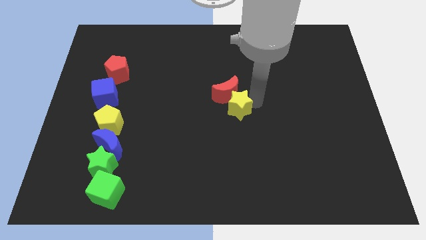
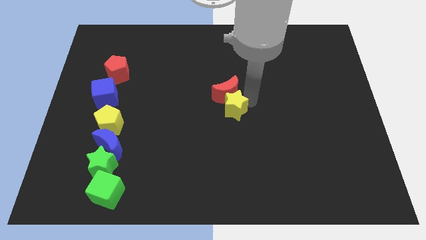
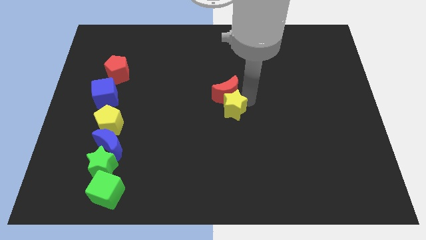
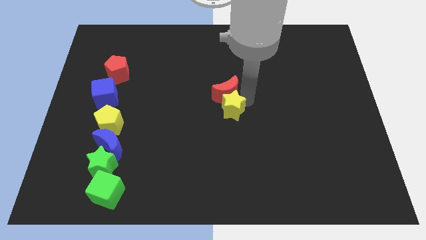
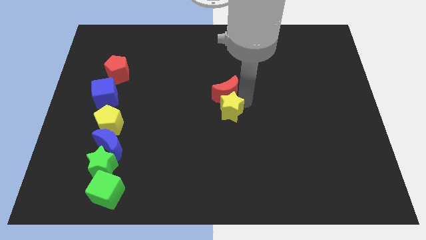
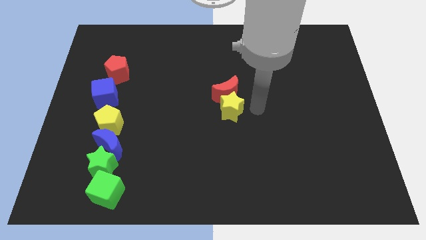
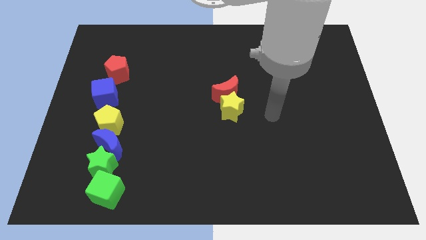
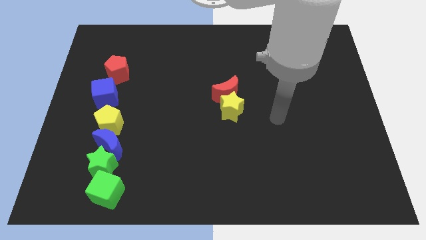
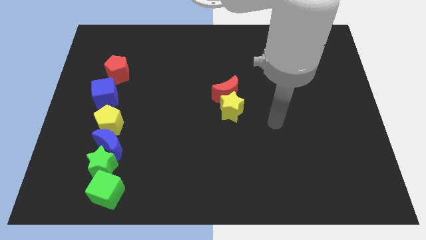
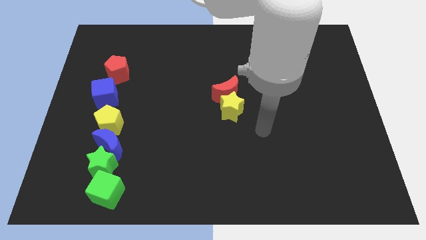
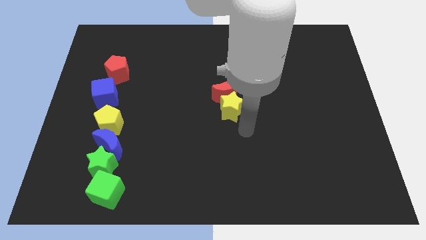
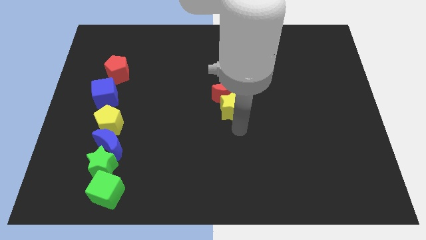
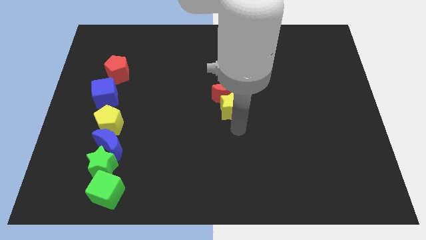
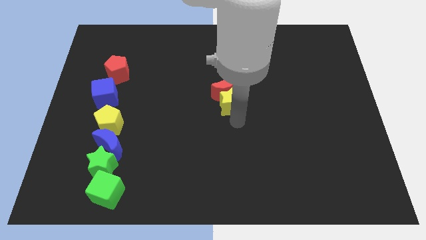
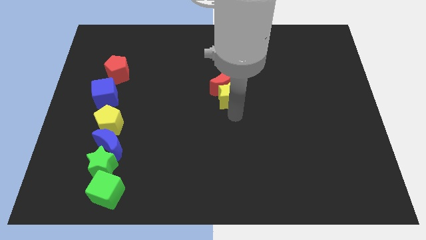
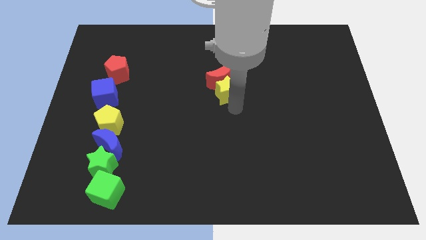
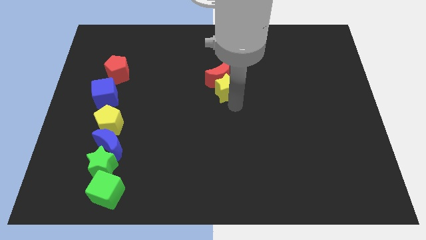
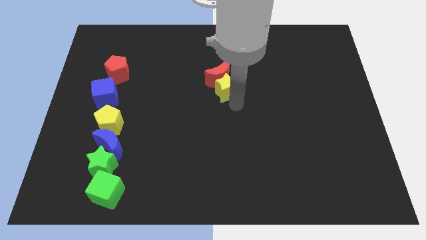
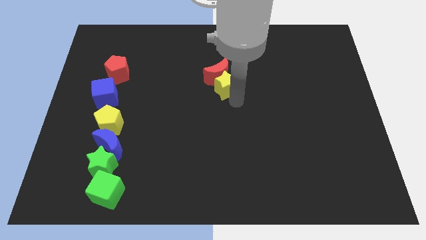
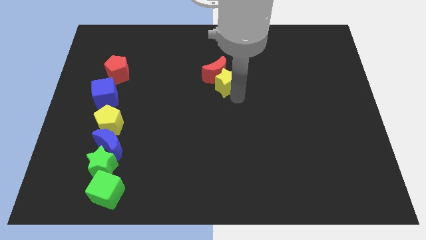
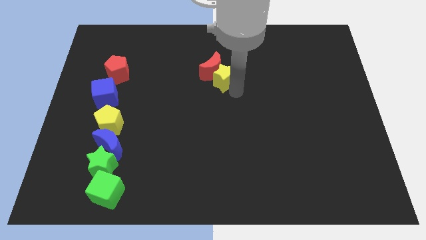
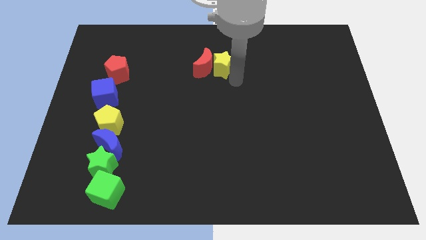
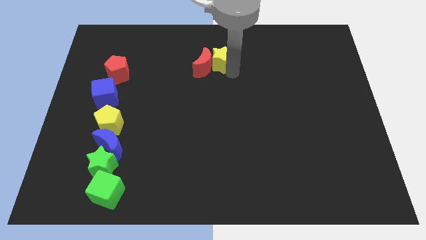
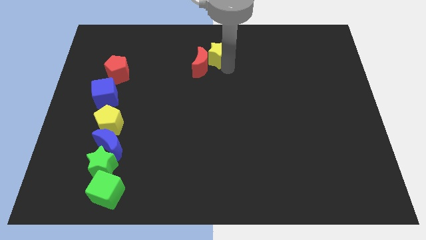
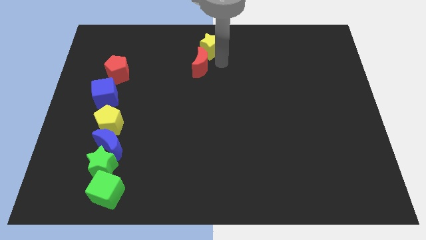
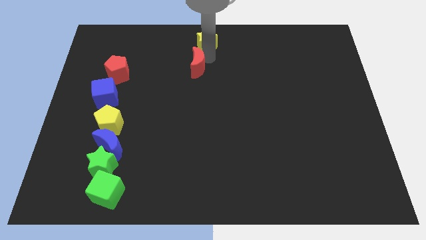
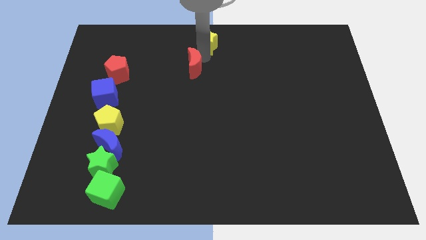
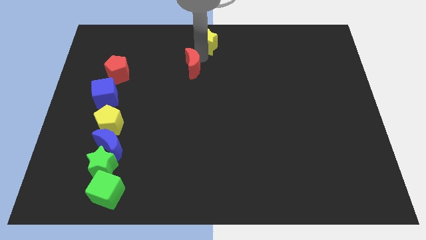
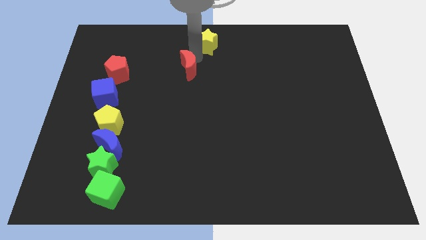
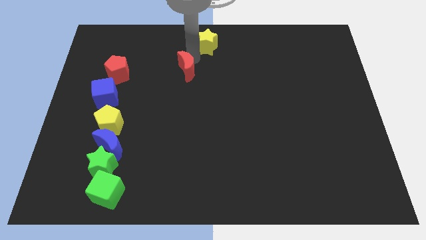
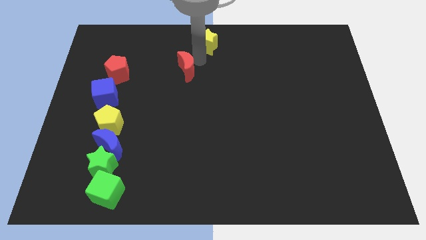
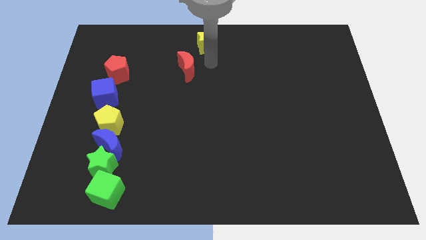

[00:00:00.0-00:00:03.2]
push the yellow star to the top center

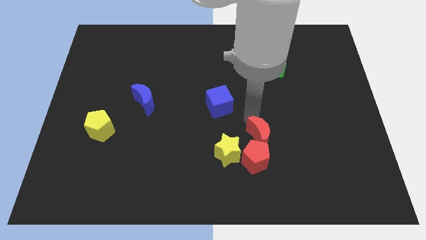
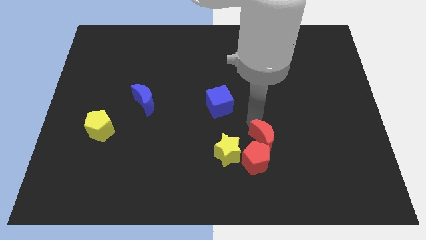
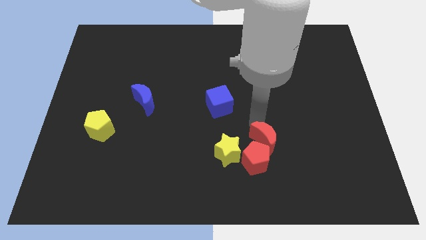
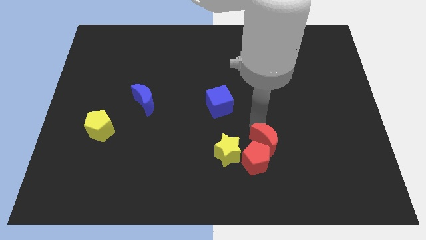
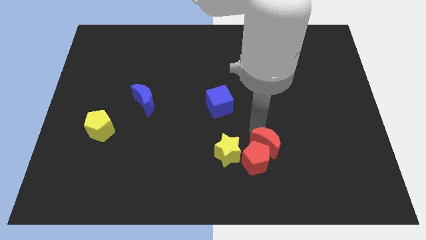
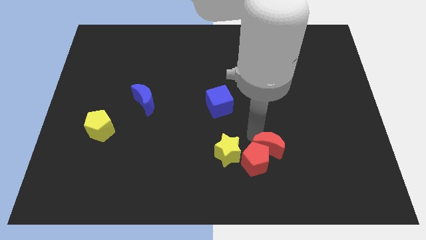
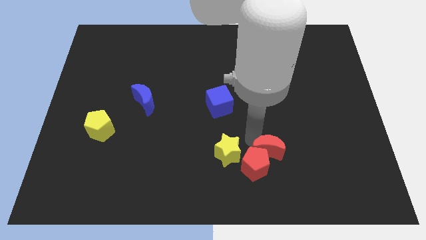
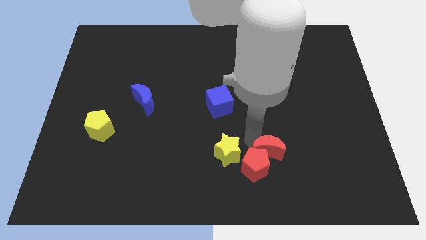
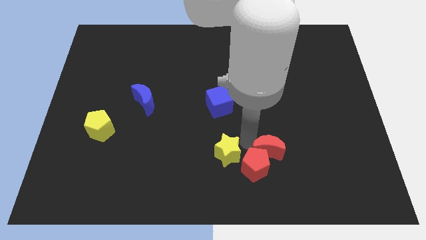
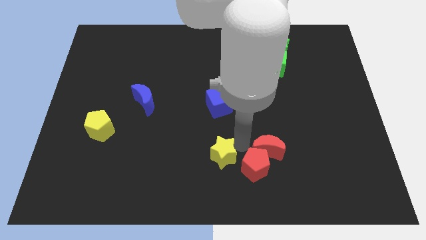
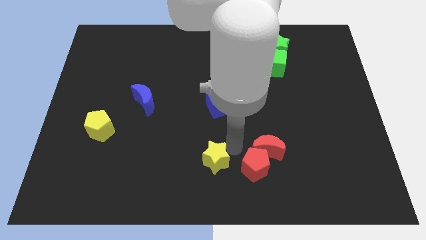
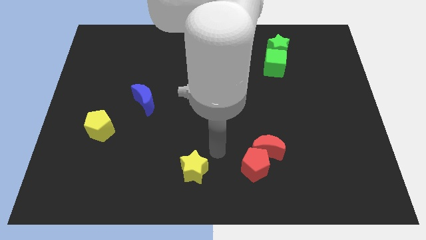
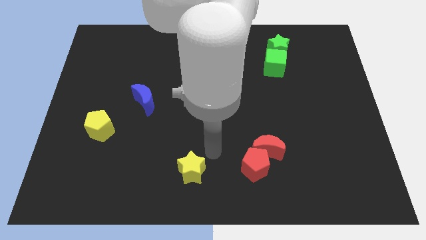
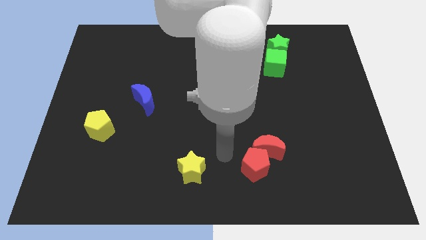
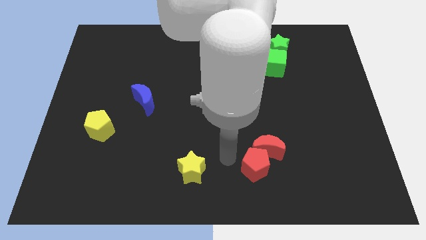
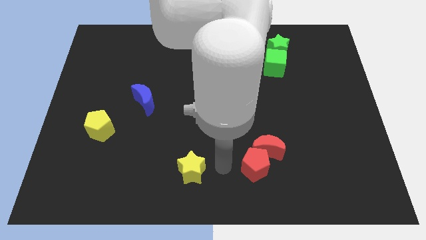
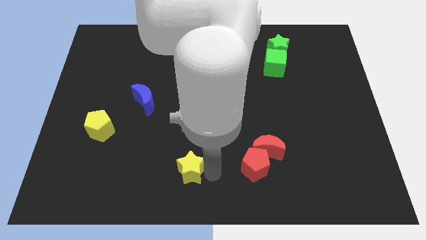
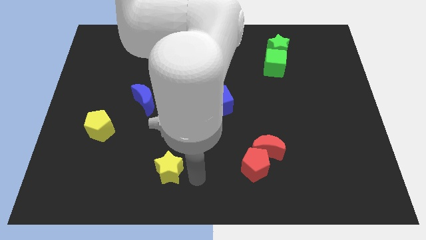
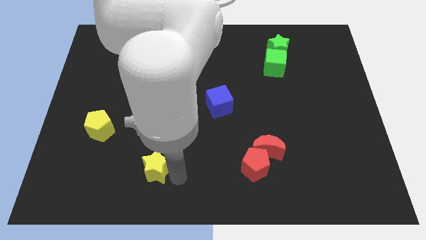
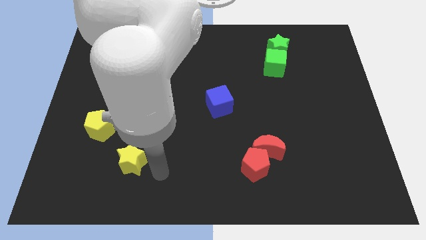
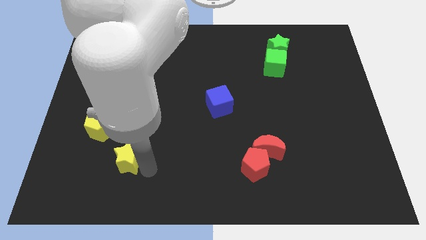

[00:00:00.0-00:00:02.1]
separate the yellow star form red pentagon

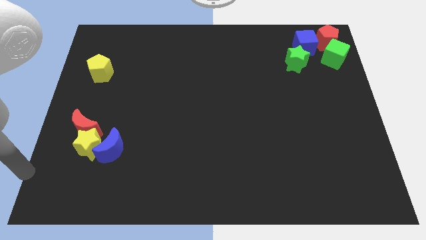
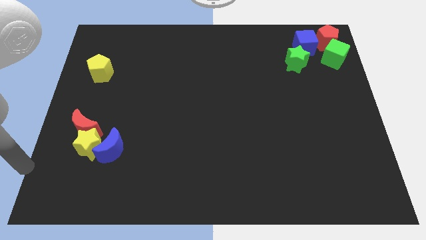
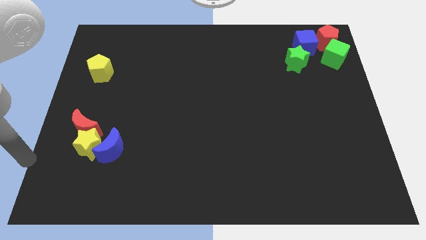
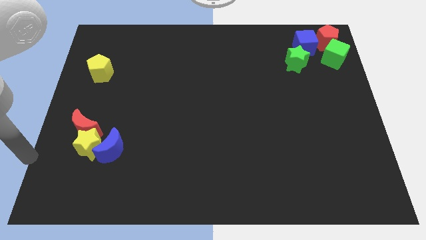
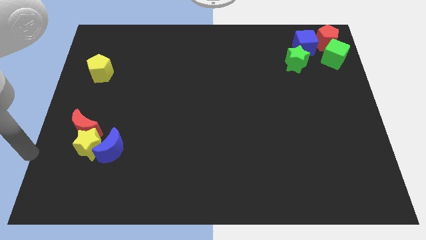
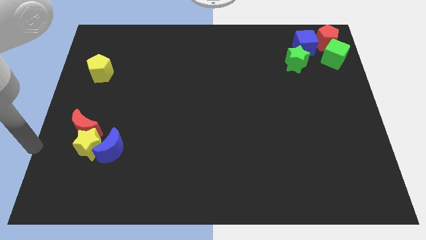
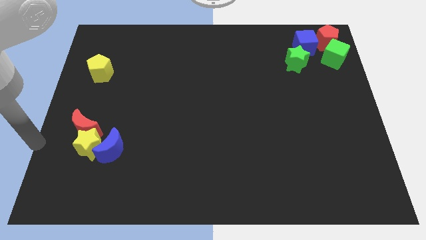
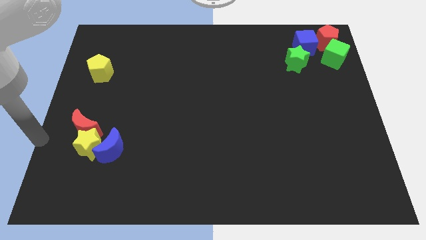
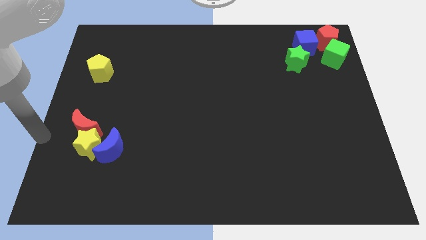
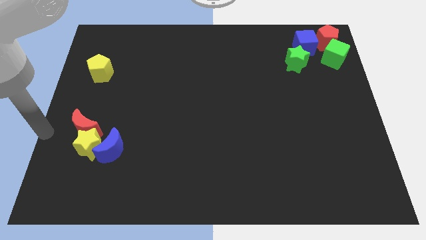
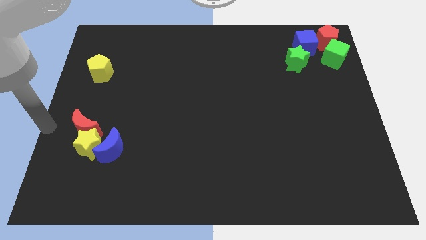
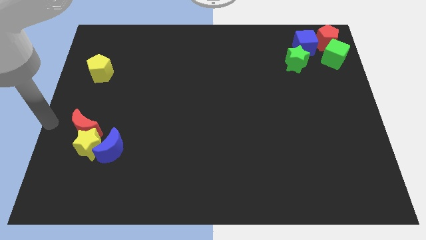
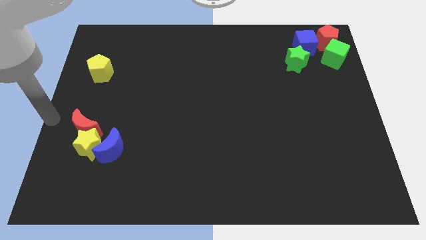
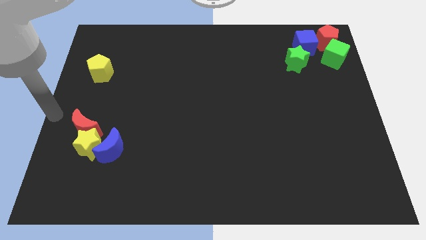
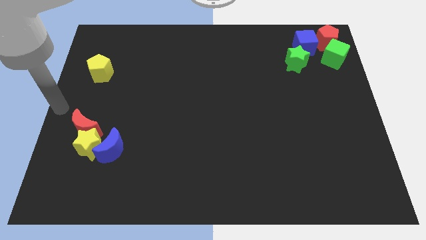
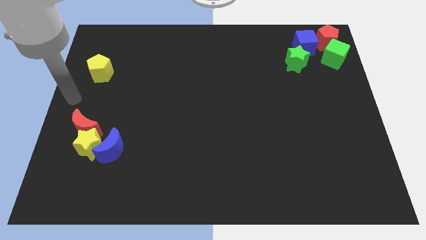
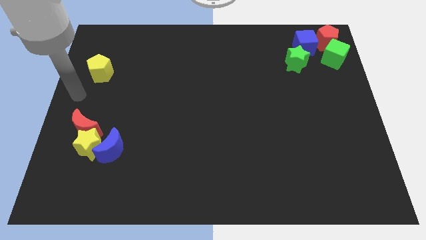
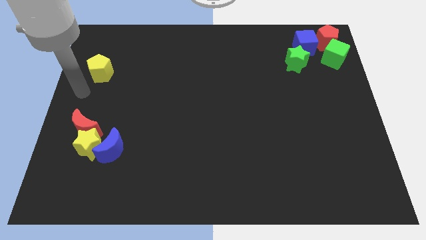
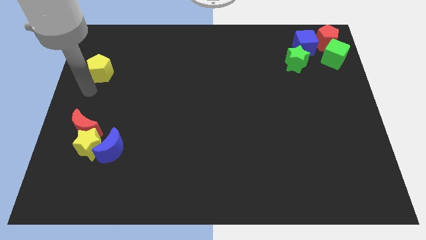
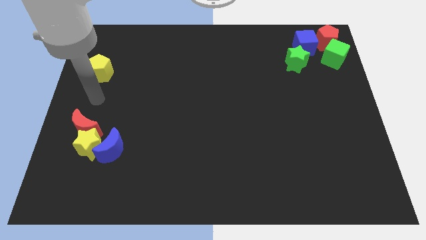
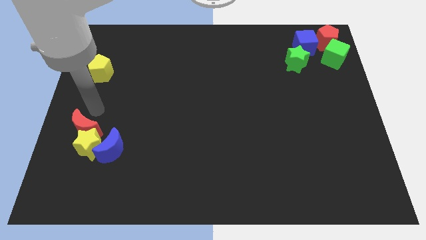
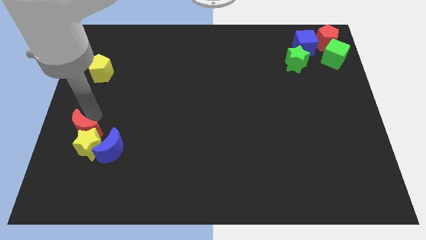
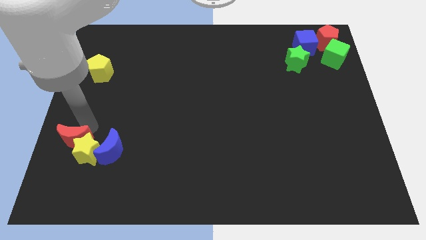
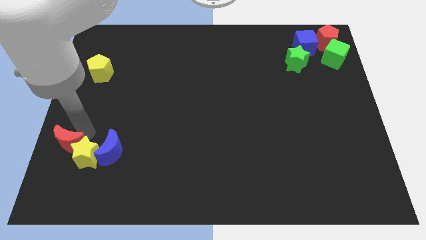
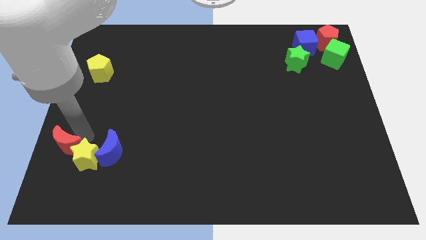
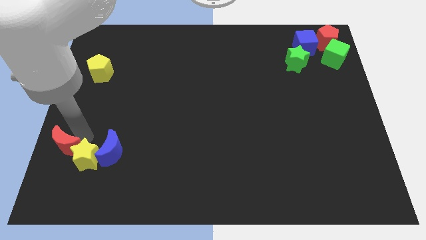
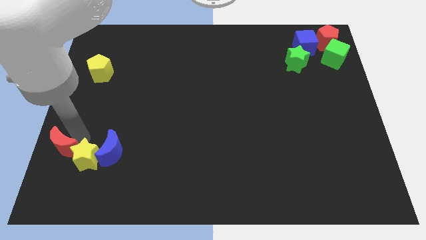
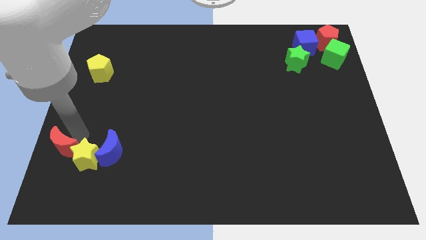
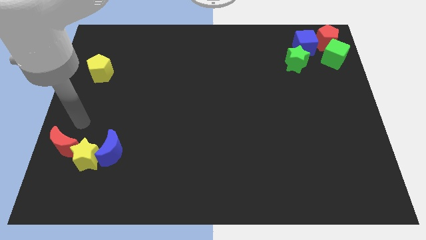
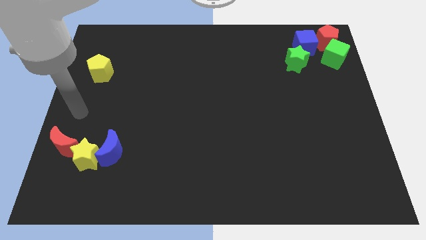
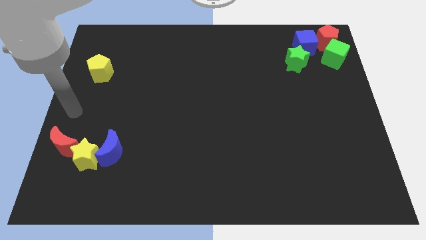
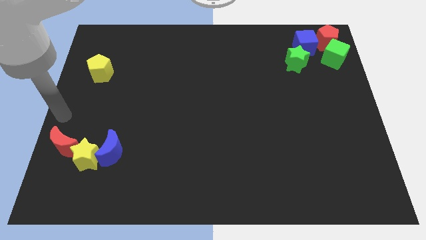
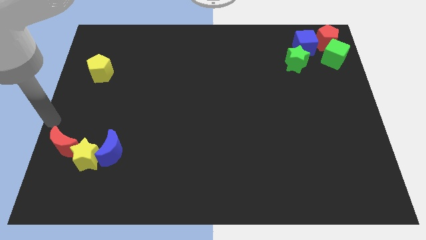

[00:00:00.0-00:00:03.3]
slightly drag the yellow stared crescent towards bottom

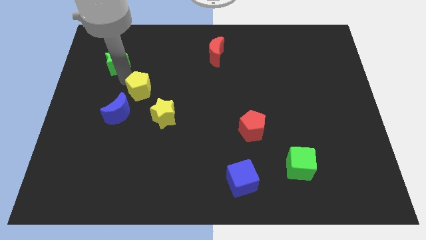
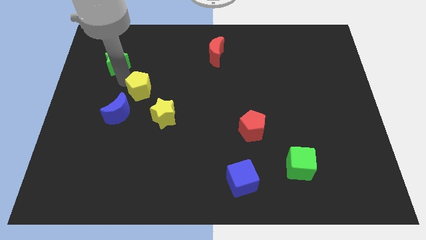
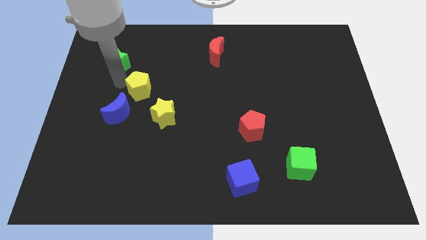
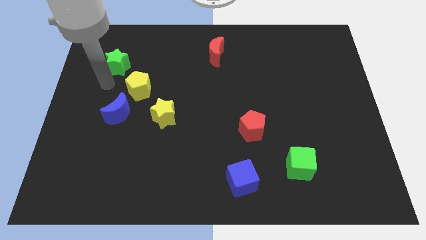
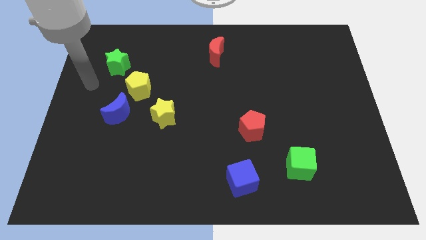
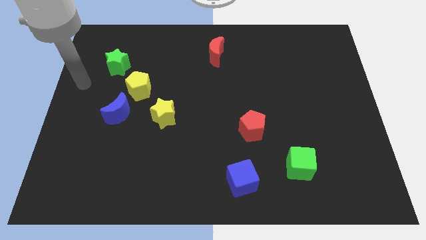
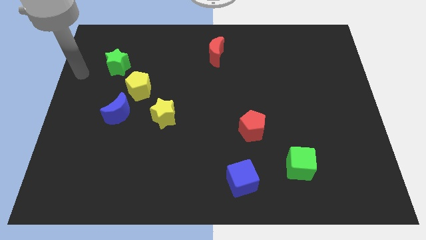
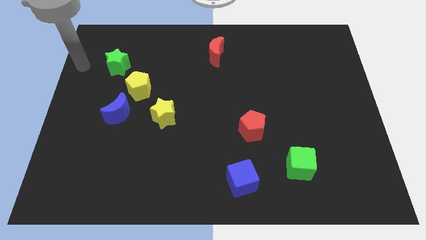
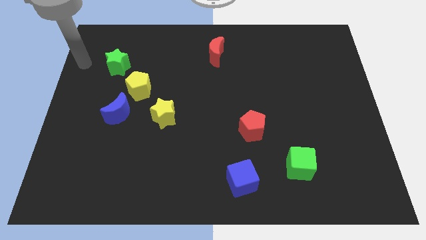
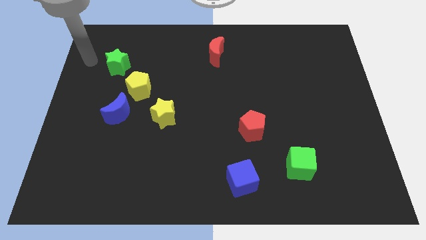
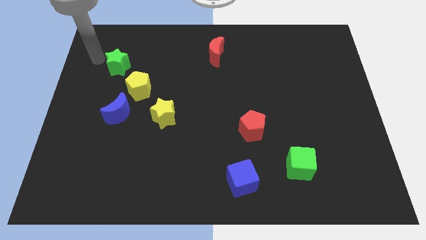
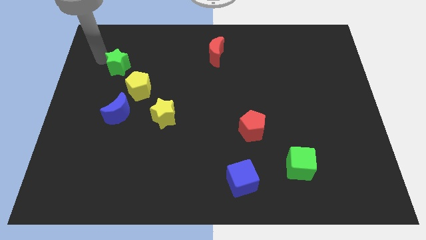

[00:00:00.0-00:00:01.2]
place your arm at the left of the green star
